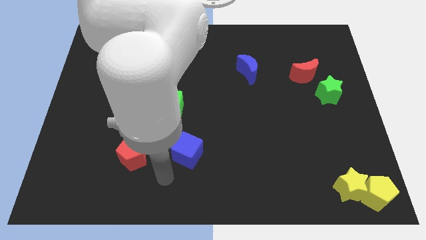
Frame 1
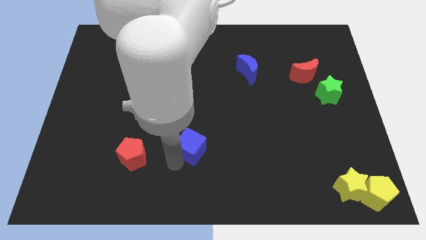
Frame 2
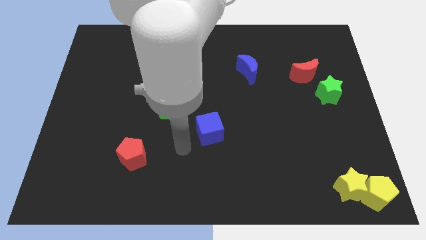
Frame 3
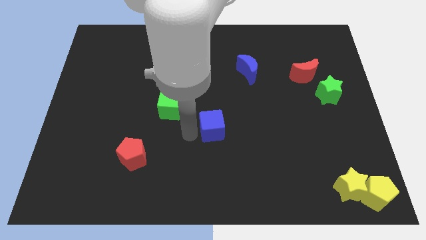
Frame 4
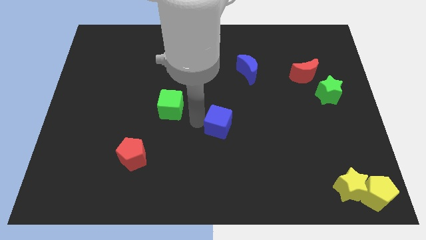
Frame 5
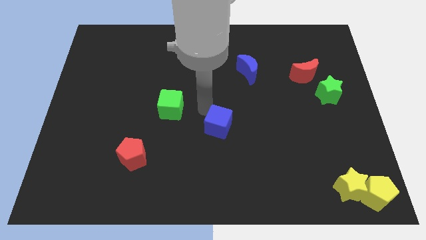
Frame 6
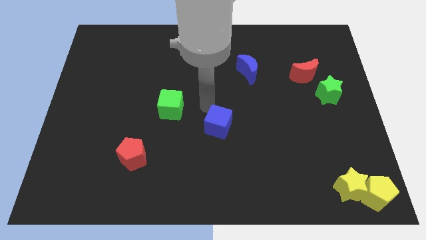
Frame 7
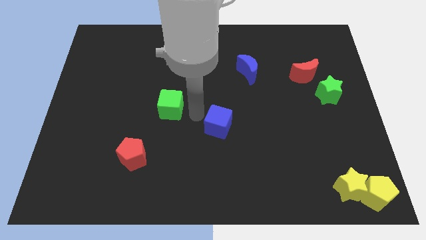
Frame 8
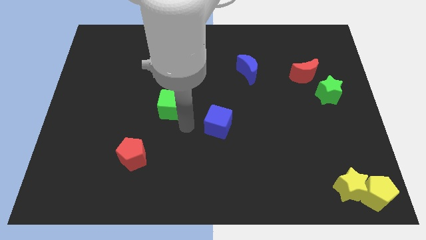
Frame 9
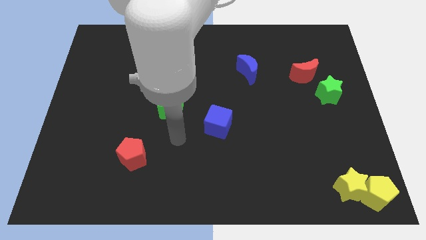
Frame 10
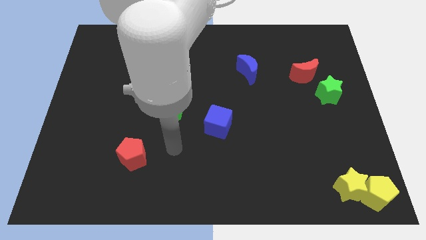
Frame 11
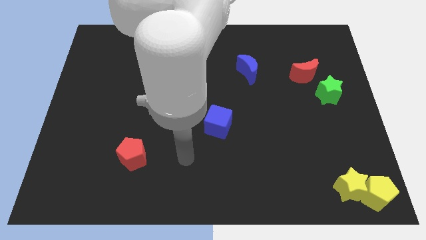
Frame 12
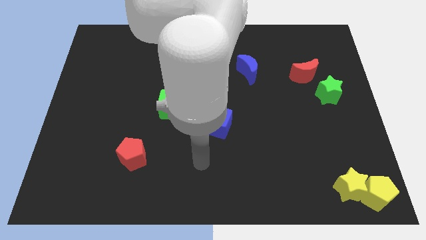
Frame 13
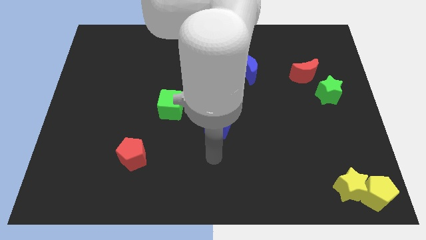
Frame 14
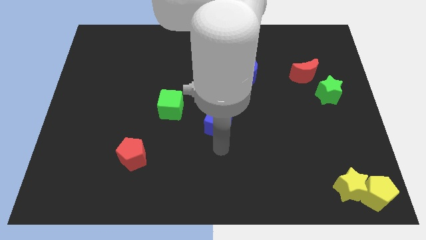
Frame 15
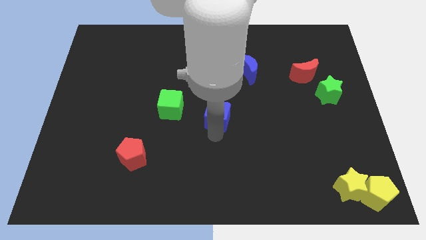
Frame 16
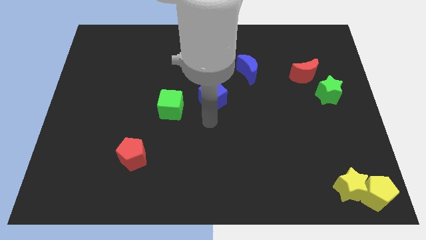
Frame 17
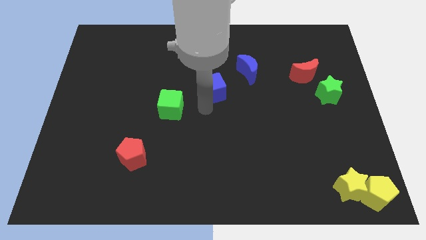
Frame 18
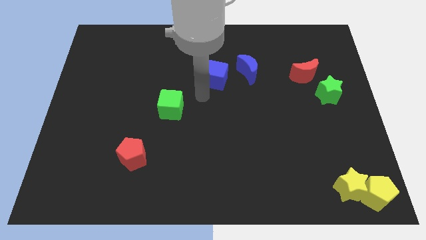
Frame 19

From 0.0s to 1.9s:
place blue cube diagonally top right to the green cube

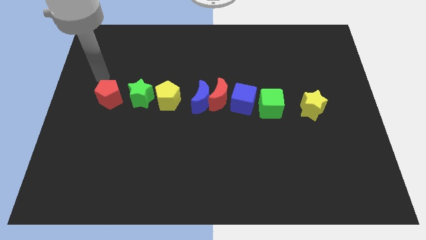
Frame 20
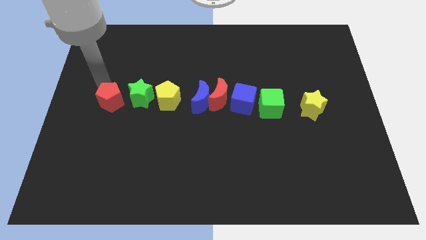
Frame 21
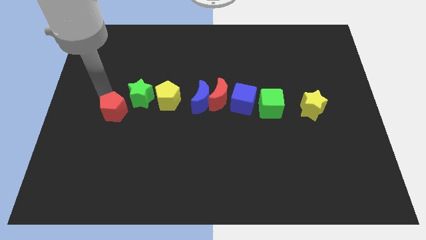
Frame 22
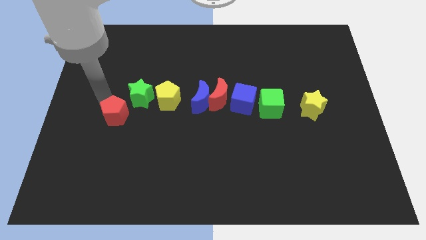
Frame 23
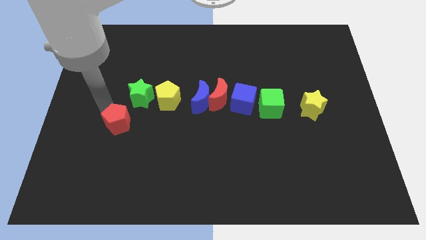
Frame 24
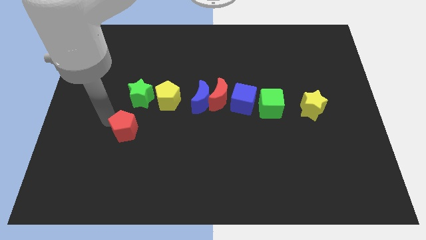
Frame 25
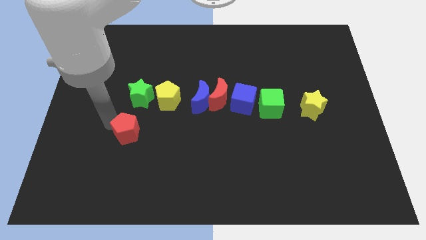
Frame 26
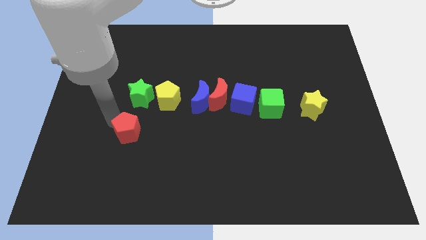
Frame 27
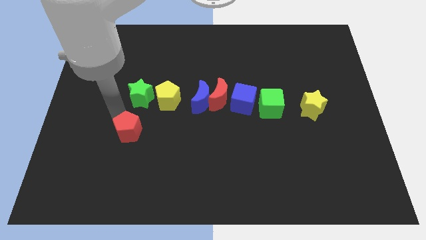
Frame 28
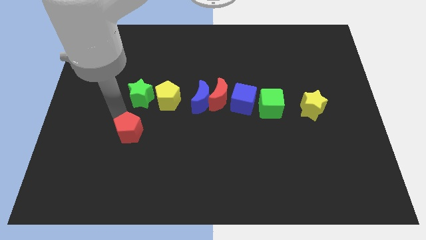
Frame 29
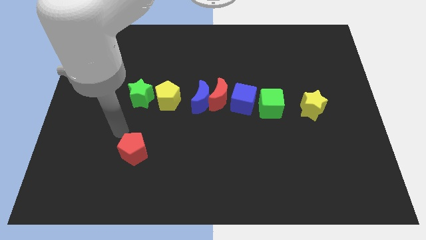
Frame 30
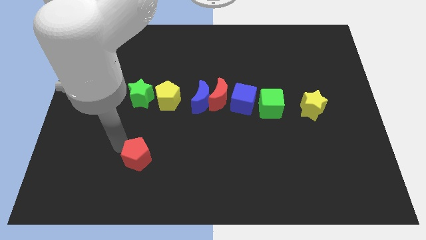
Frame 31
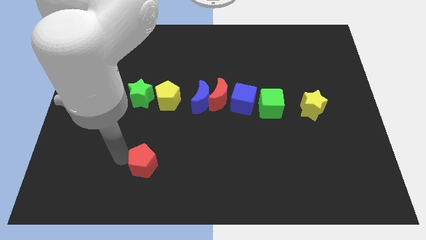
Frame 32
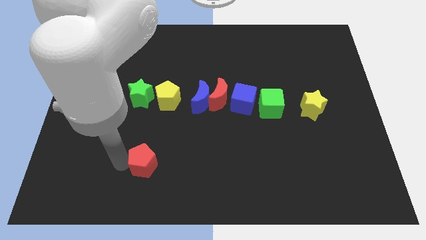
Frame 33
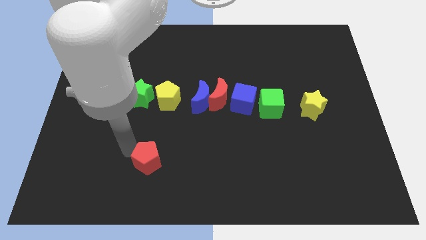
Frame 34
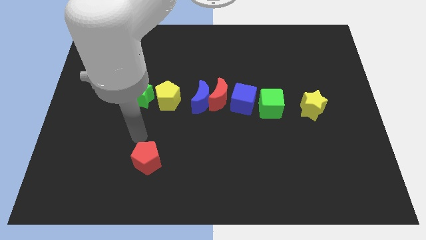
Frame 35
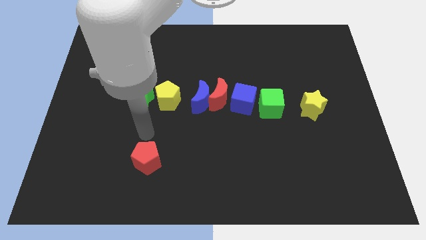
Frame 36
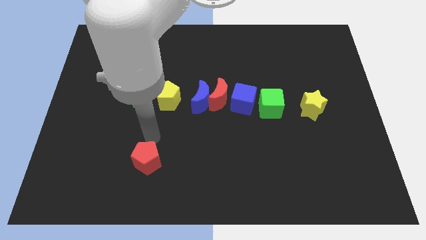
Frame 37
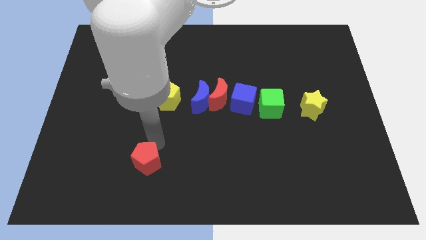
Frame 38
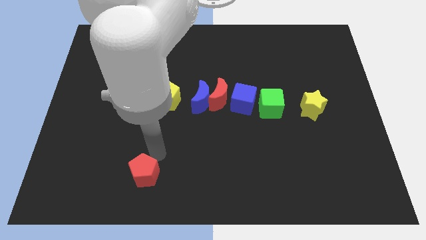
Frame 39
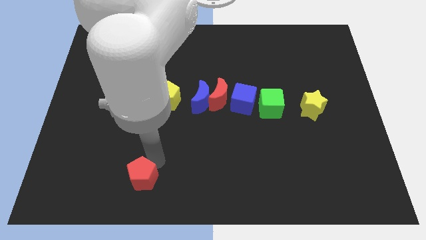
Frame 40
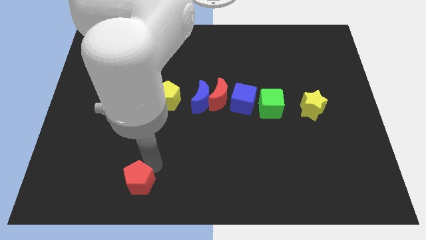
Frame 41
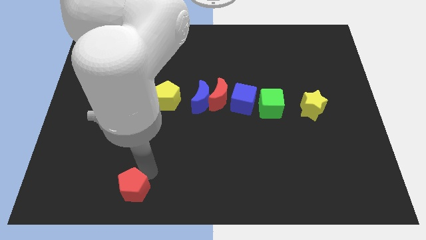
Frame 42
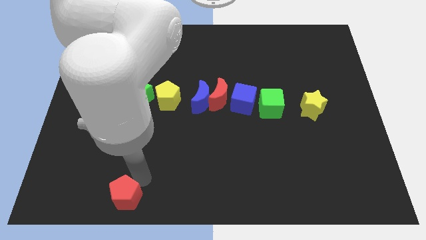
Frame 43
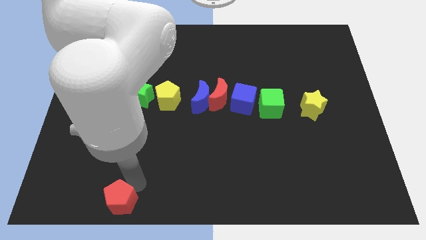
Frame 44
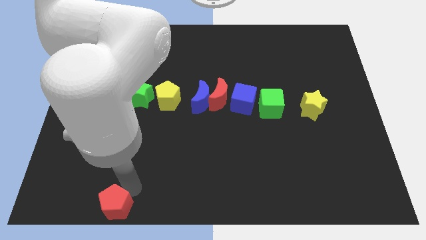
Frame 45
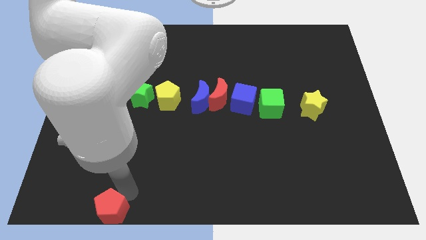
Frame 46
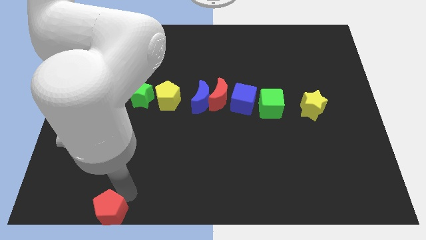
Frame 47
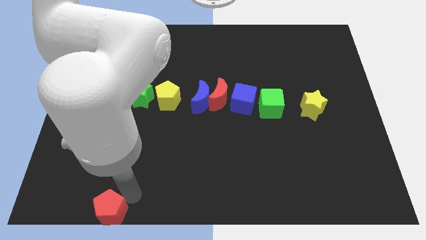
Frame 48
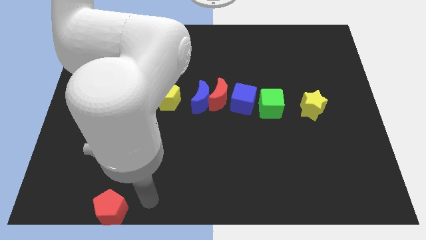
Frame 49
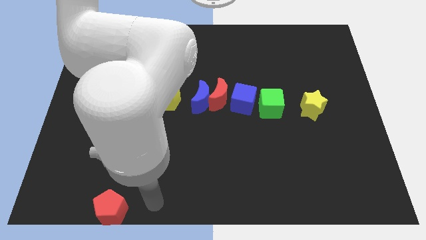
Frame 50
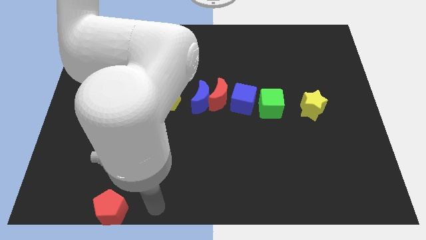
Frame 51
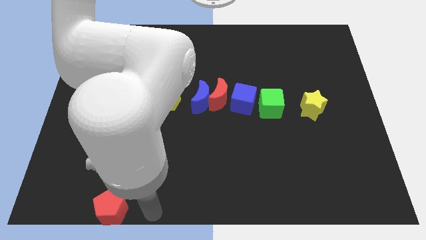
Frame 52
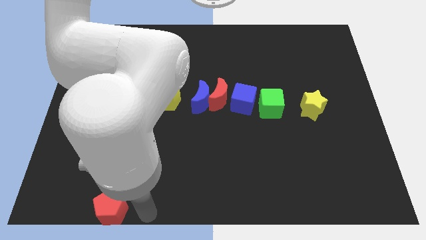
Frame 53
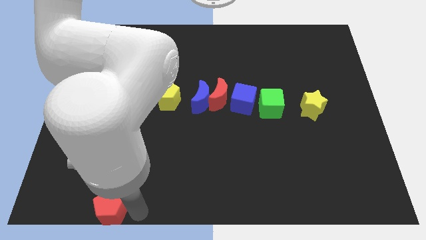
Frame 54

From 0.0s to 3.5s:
move the red pentagon to bottom side of the board

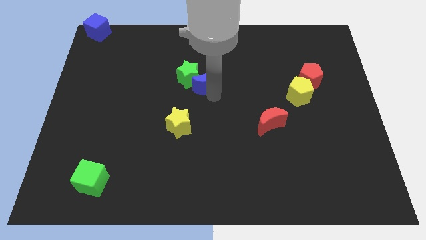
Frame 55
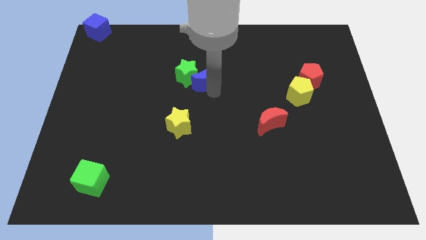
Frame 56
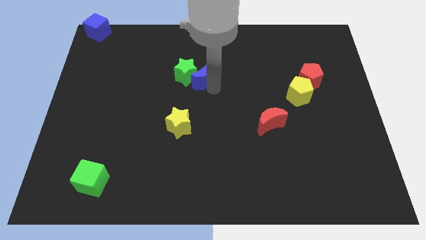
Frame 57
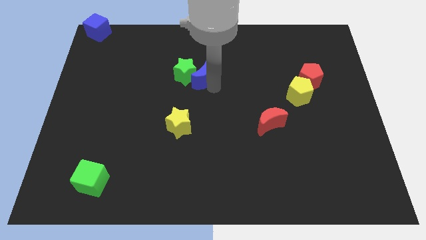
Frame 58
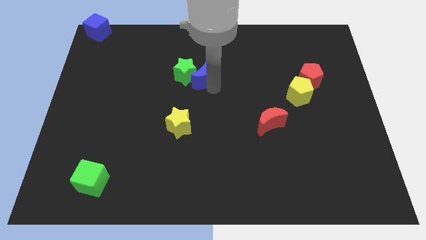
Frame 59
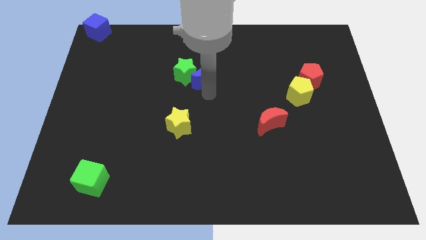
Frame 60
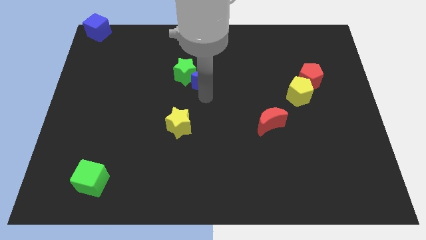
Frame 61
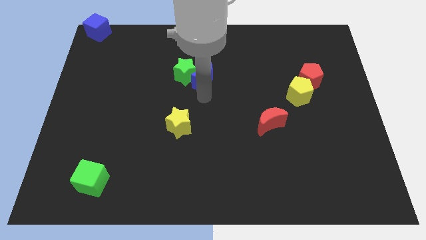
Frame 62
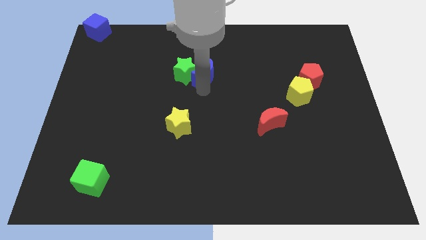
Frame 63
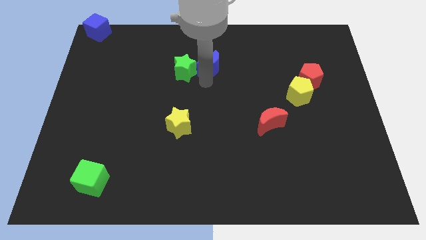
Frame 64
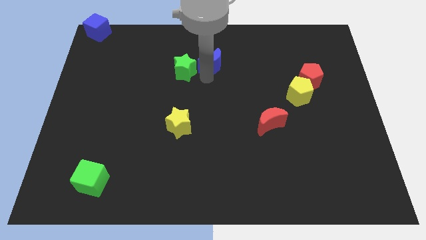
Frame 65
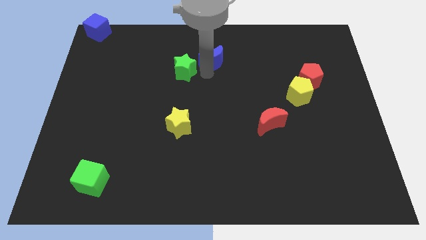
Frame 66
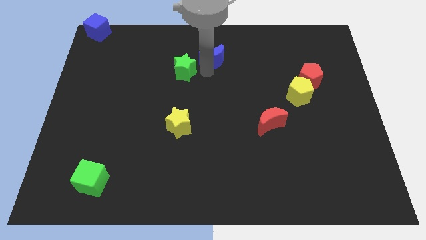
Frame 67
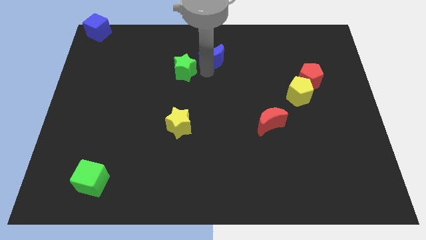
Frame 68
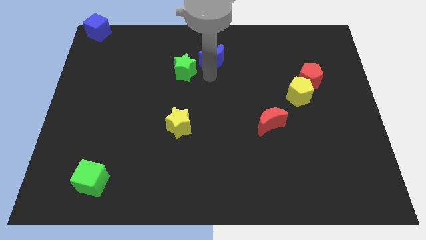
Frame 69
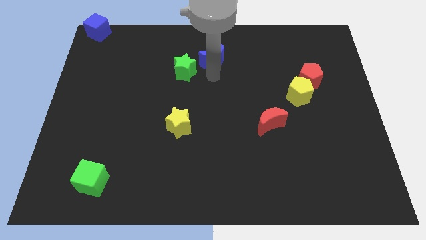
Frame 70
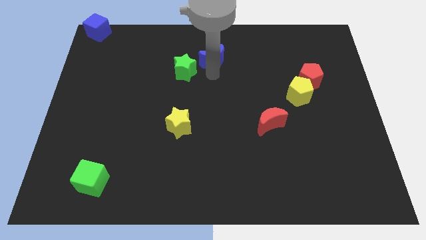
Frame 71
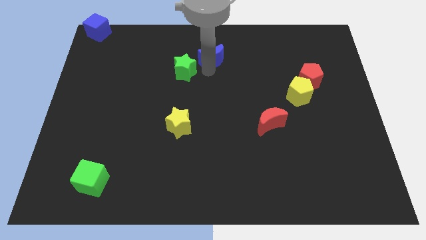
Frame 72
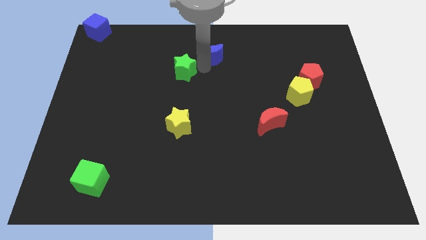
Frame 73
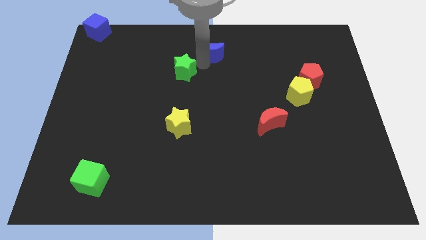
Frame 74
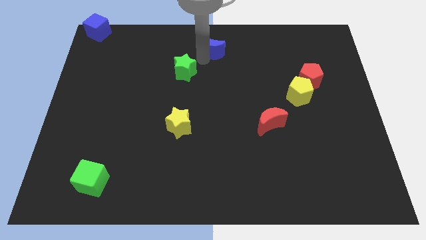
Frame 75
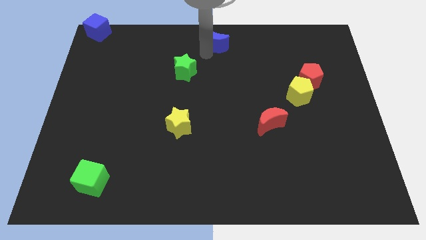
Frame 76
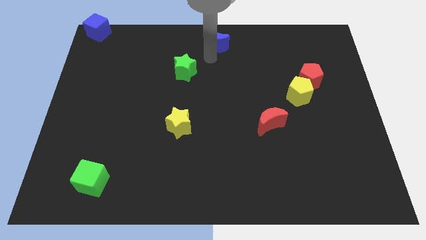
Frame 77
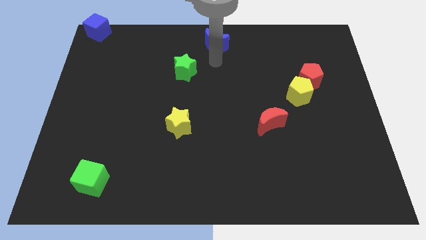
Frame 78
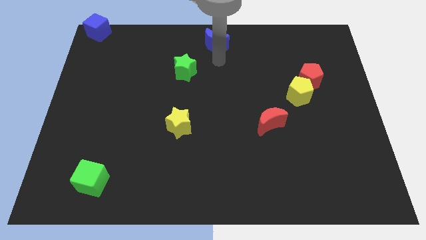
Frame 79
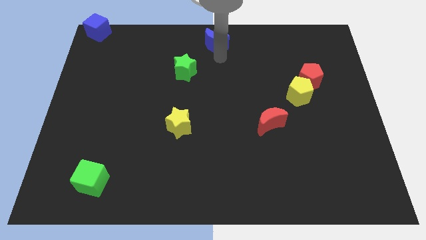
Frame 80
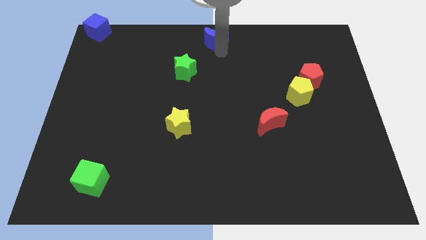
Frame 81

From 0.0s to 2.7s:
separate the blue moon from the green star

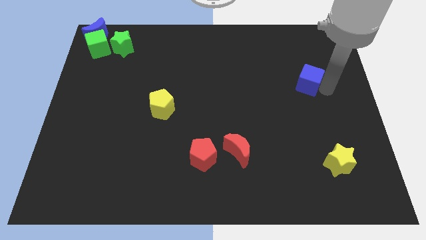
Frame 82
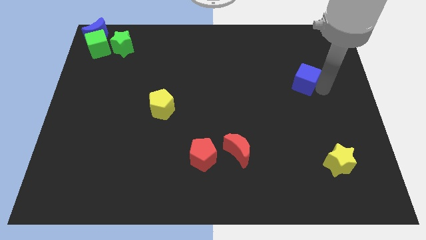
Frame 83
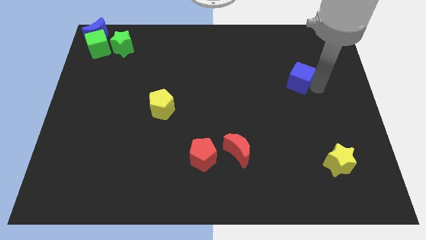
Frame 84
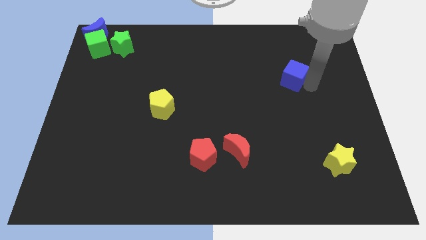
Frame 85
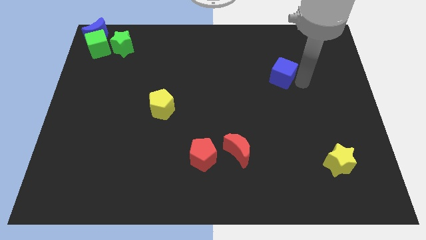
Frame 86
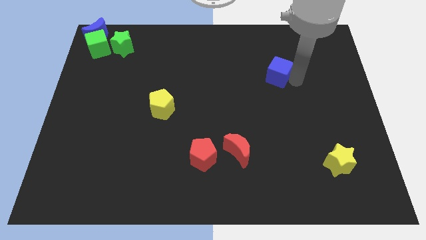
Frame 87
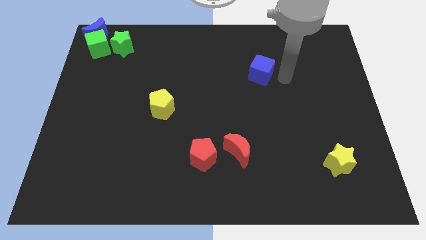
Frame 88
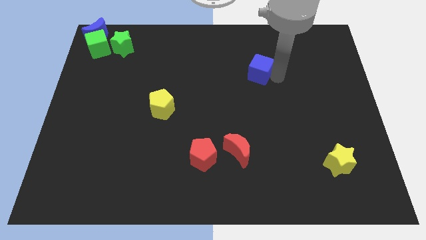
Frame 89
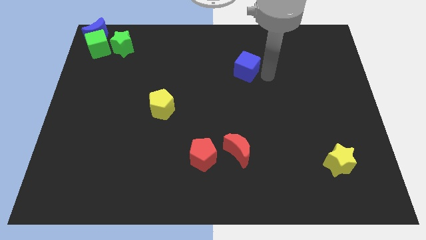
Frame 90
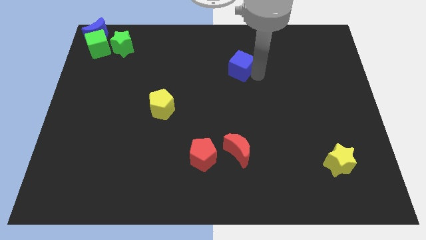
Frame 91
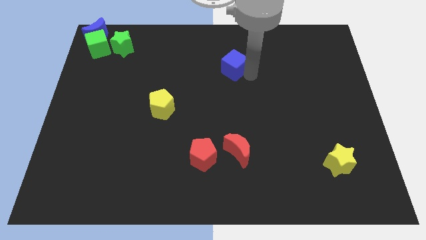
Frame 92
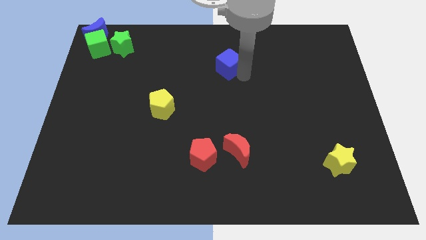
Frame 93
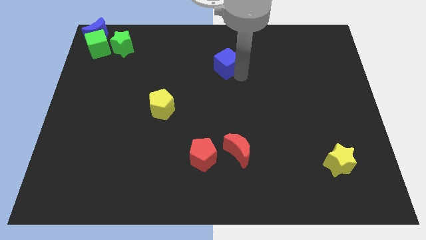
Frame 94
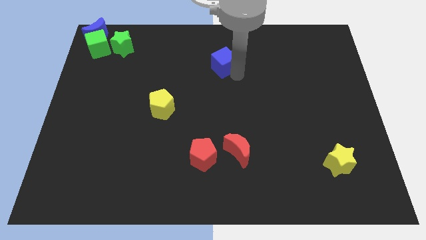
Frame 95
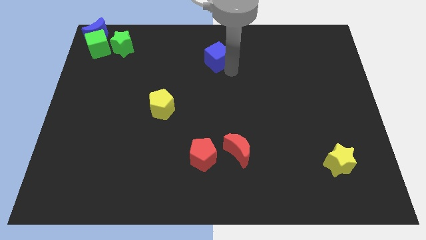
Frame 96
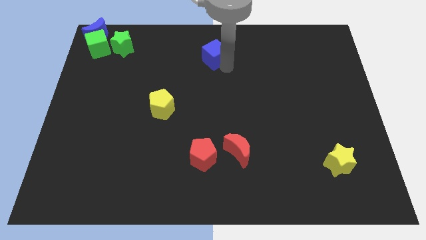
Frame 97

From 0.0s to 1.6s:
push the blue cube diagonally bottom right to the green star
